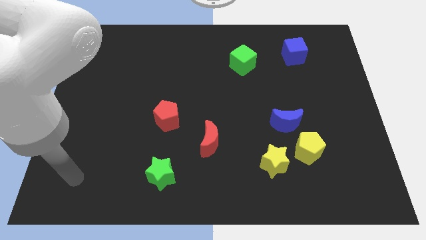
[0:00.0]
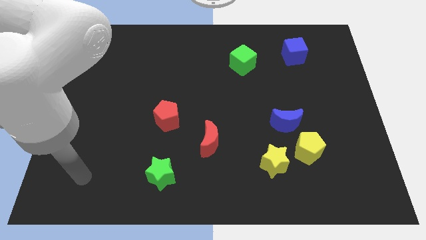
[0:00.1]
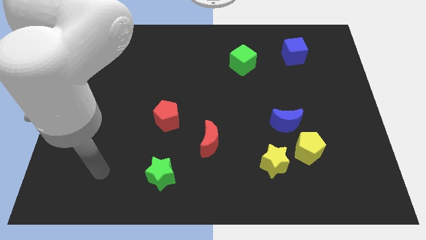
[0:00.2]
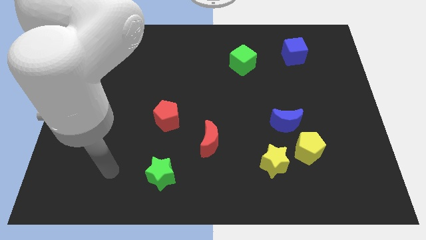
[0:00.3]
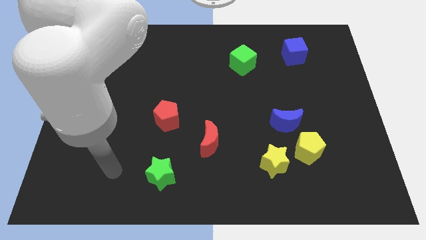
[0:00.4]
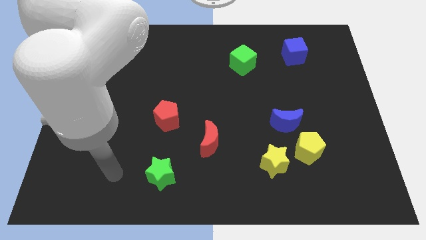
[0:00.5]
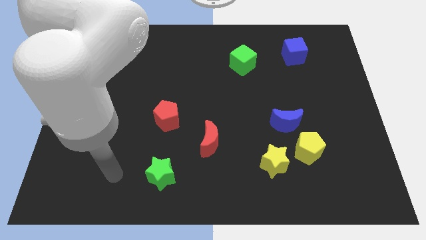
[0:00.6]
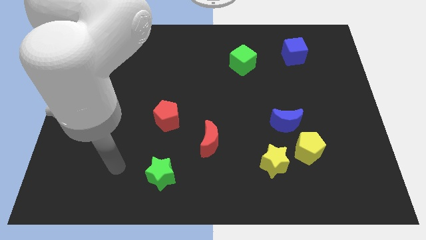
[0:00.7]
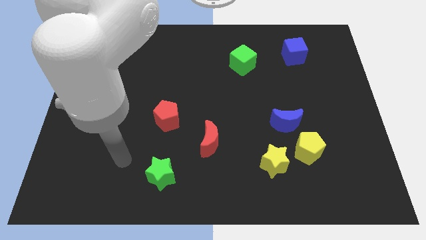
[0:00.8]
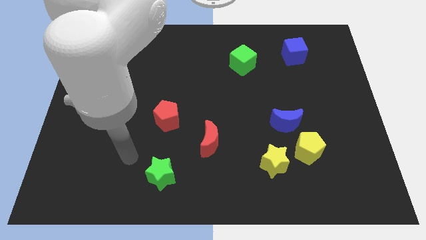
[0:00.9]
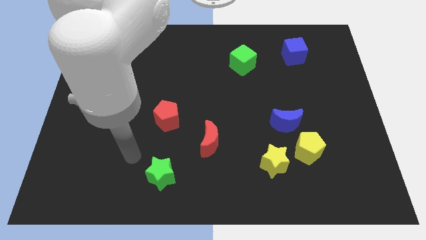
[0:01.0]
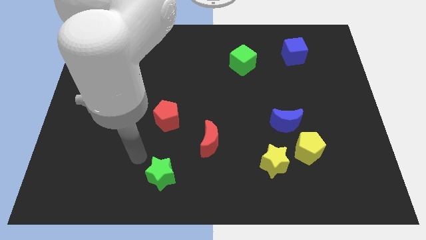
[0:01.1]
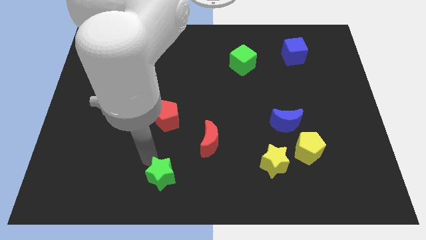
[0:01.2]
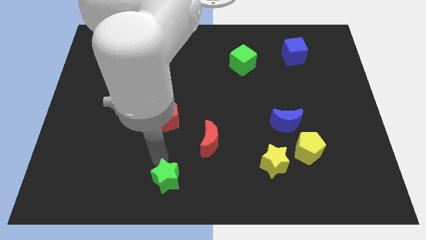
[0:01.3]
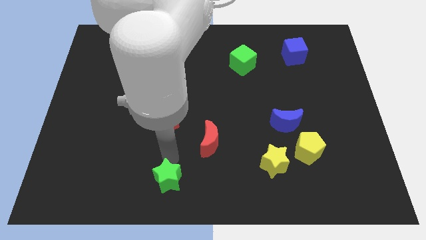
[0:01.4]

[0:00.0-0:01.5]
place your arm to the top of green star

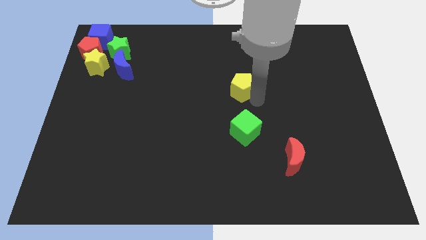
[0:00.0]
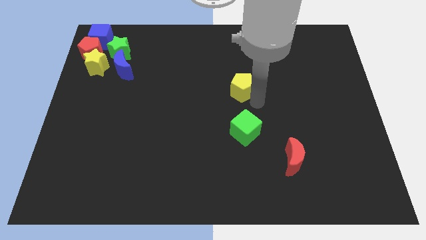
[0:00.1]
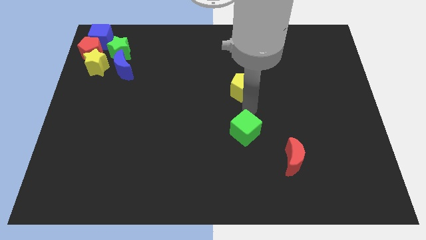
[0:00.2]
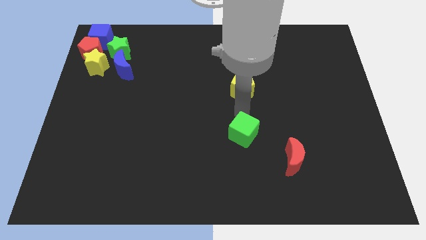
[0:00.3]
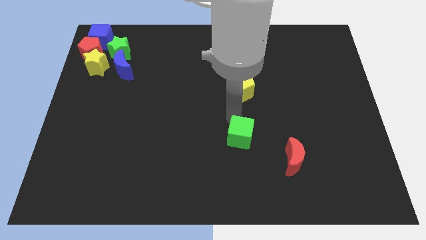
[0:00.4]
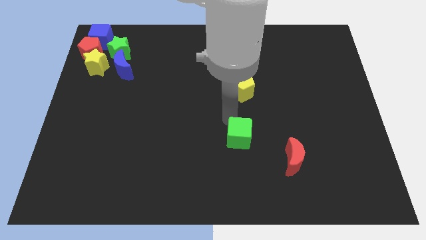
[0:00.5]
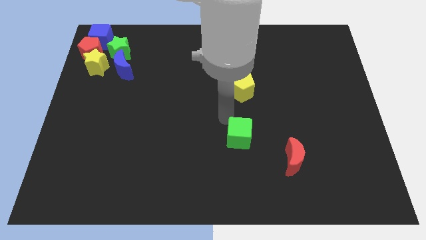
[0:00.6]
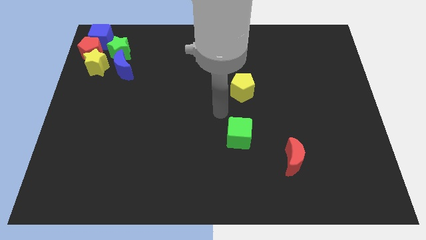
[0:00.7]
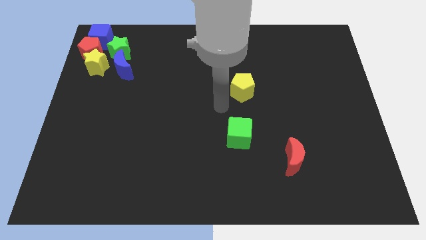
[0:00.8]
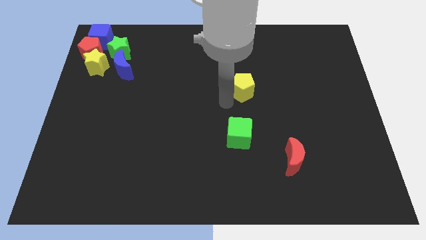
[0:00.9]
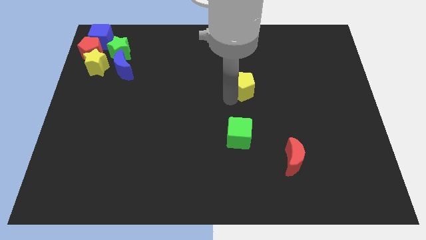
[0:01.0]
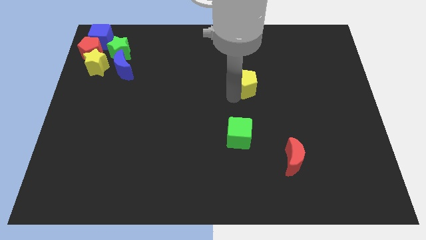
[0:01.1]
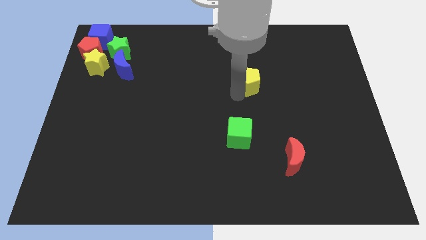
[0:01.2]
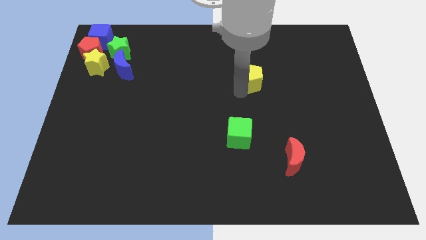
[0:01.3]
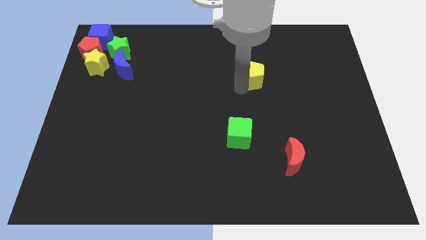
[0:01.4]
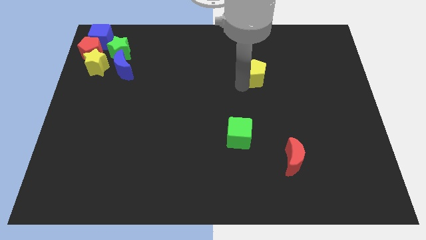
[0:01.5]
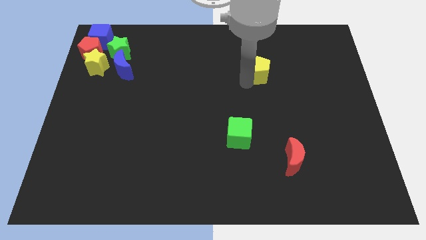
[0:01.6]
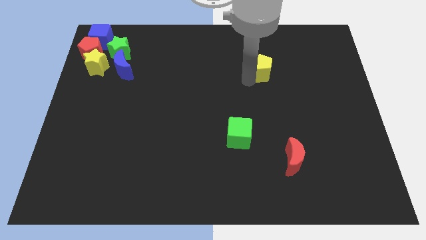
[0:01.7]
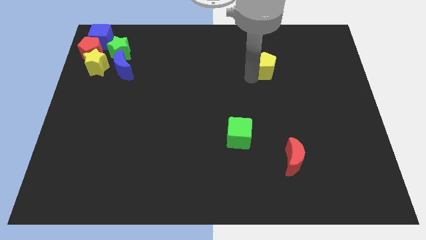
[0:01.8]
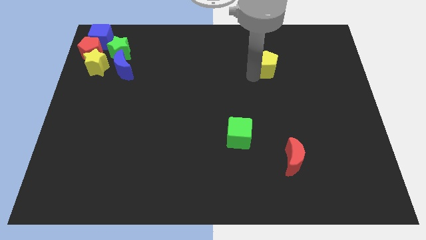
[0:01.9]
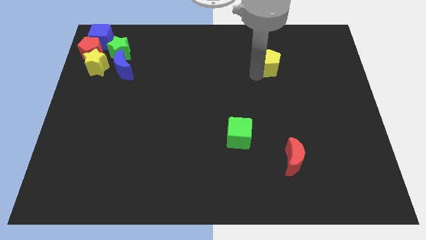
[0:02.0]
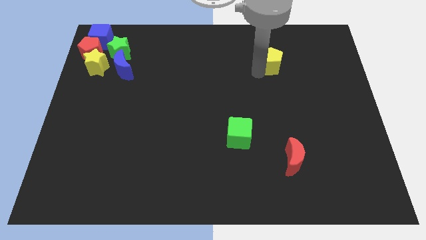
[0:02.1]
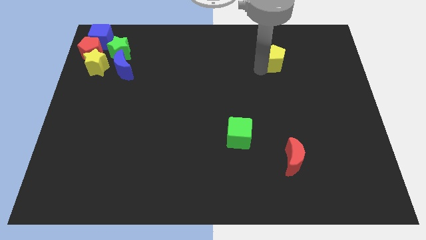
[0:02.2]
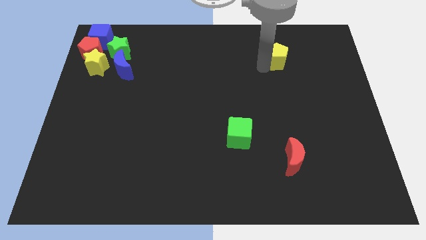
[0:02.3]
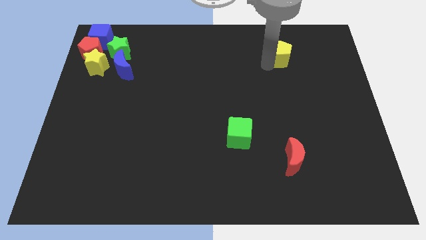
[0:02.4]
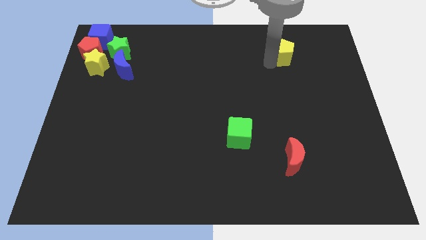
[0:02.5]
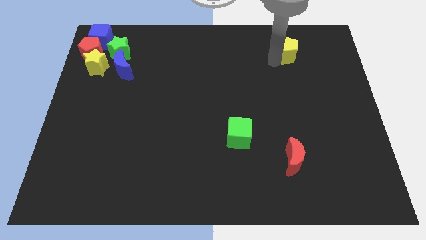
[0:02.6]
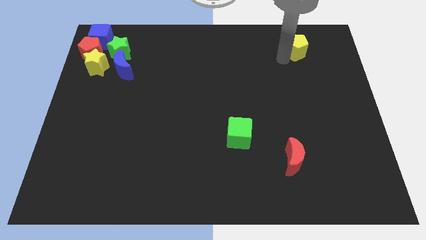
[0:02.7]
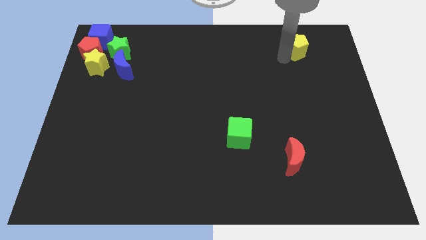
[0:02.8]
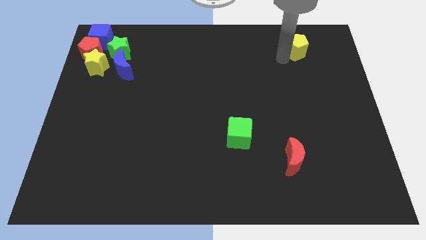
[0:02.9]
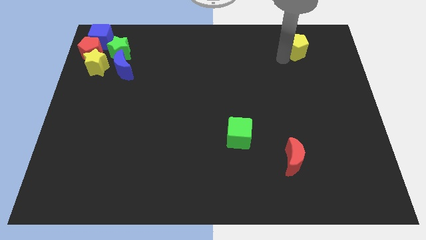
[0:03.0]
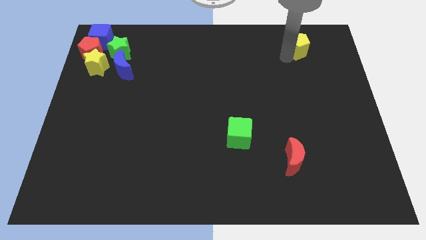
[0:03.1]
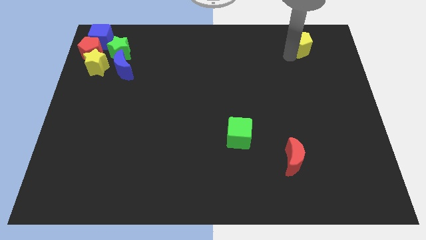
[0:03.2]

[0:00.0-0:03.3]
place the yellow pentagon to the top right

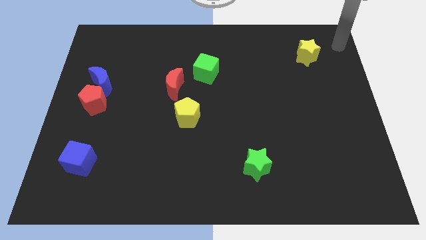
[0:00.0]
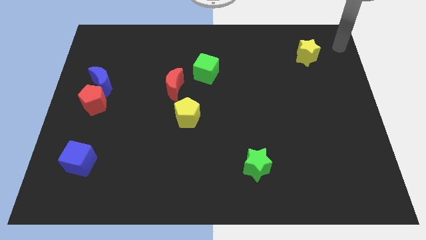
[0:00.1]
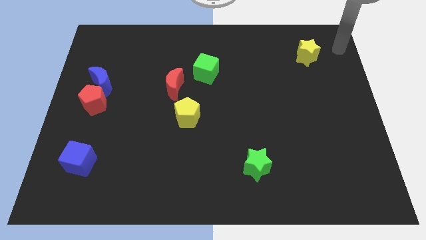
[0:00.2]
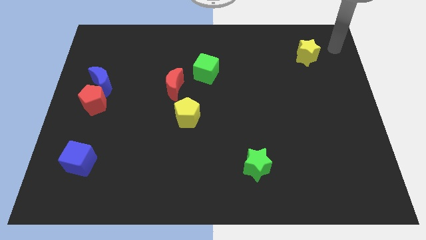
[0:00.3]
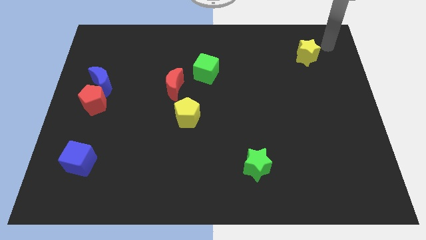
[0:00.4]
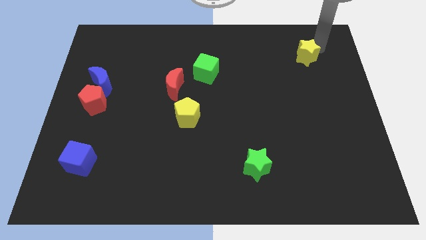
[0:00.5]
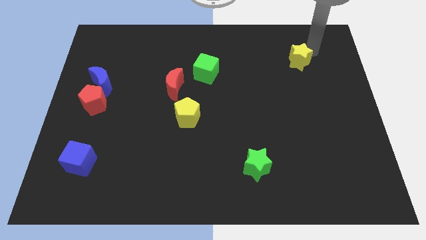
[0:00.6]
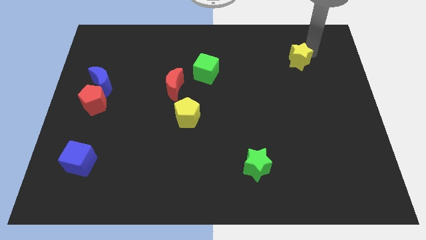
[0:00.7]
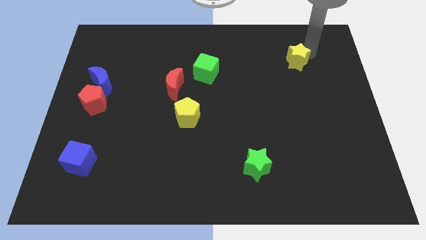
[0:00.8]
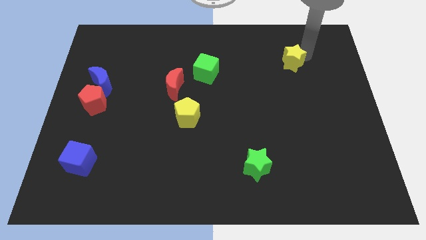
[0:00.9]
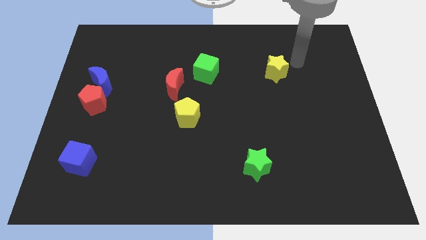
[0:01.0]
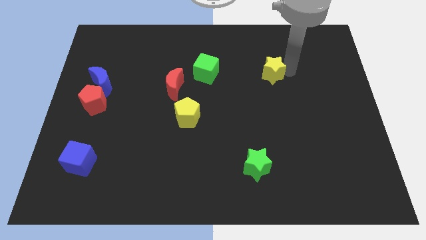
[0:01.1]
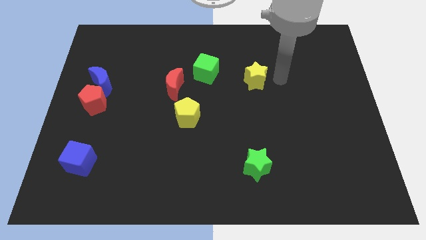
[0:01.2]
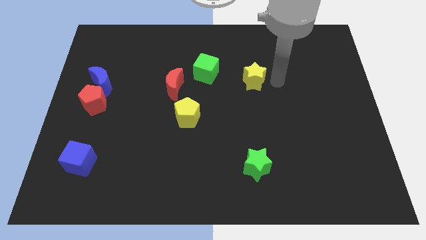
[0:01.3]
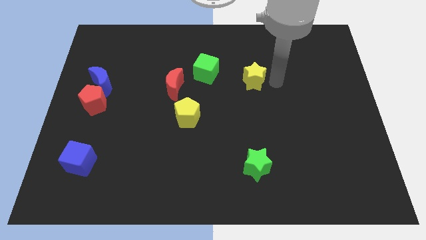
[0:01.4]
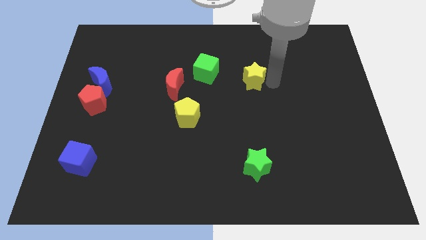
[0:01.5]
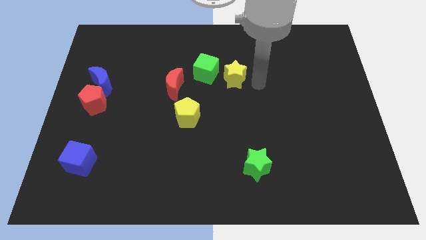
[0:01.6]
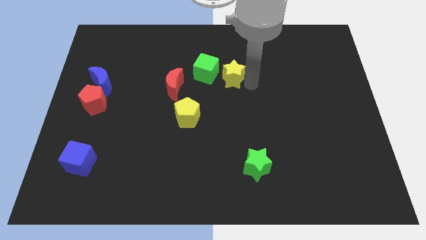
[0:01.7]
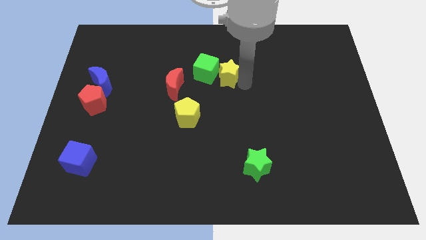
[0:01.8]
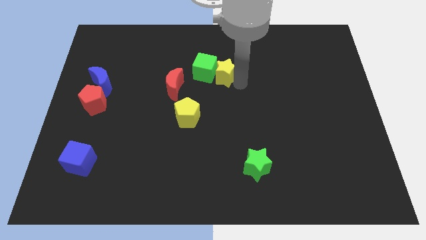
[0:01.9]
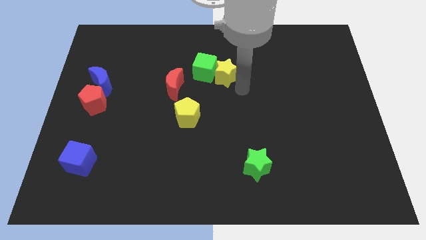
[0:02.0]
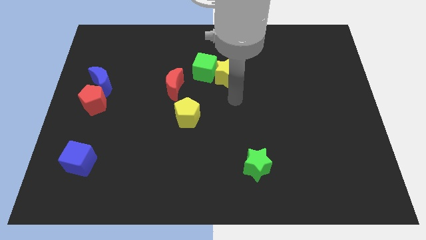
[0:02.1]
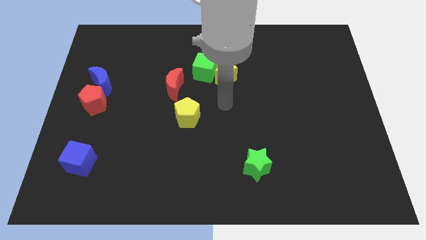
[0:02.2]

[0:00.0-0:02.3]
move the yellow star into green cube

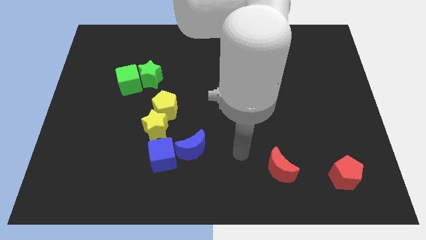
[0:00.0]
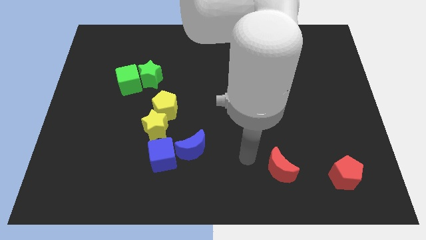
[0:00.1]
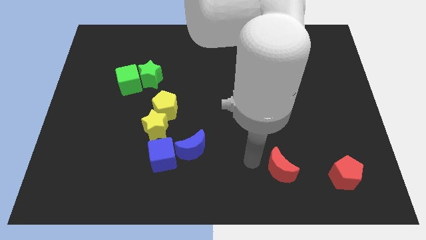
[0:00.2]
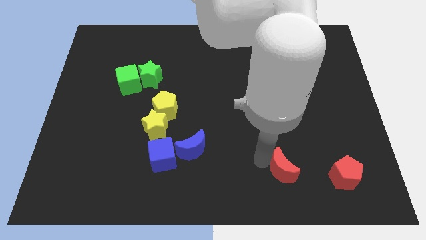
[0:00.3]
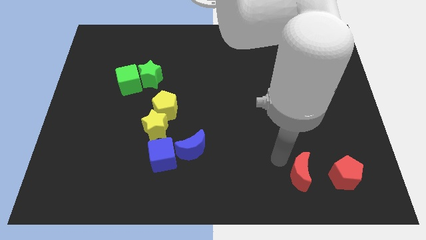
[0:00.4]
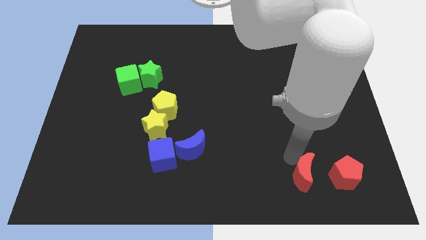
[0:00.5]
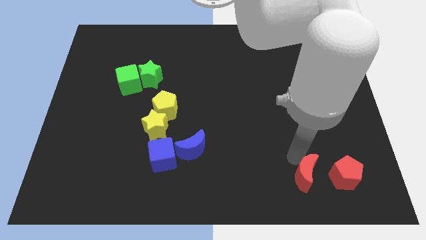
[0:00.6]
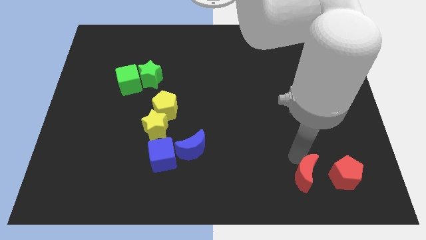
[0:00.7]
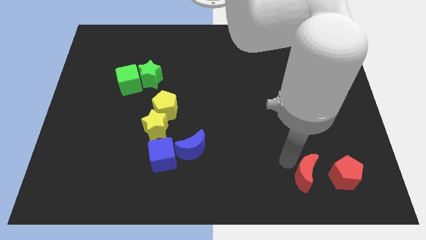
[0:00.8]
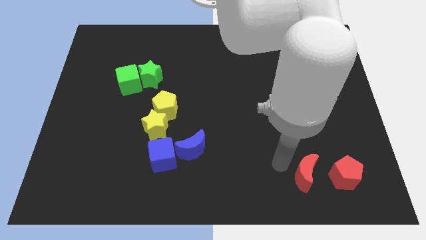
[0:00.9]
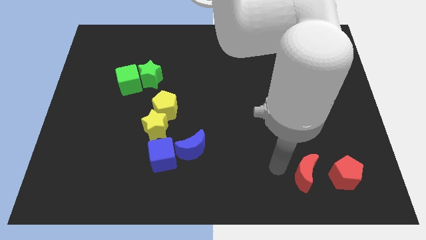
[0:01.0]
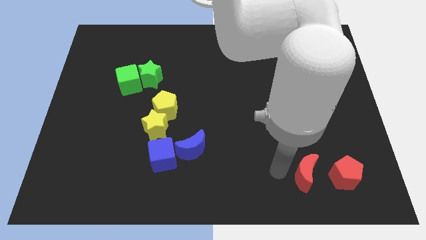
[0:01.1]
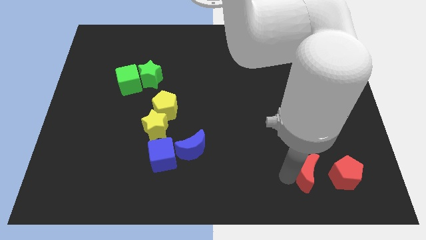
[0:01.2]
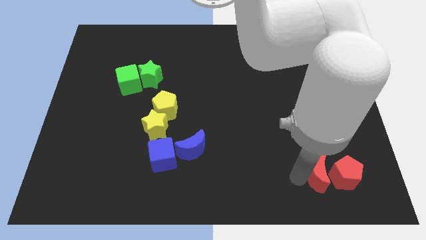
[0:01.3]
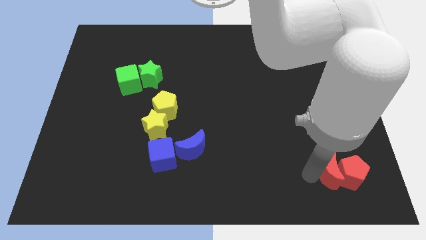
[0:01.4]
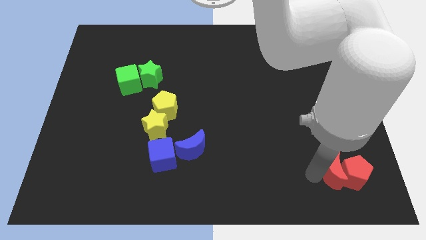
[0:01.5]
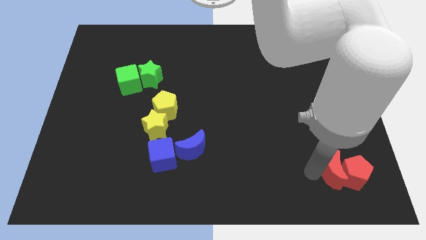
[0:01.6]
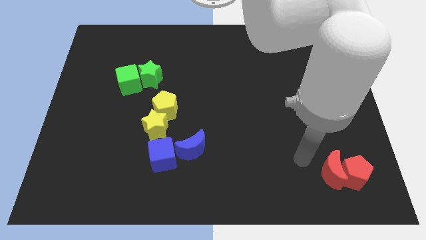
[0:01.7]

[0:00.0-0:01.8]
group up the red blocks at the bottom right corner

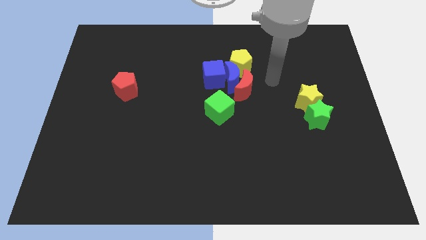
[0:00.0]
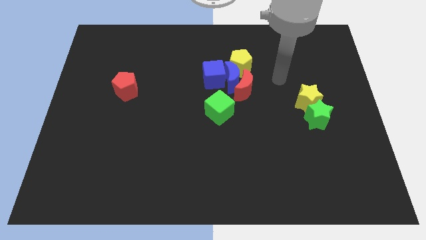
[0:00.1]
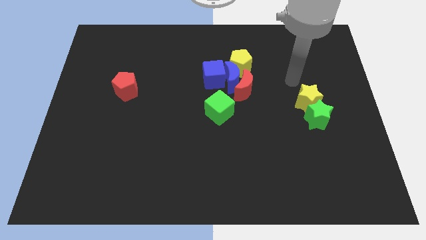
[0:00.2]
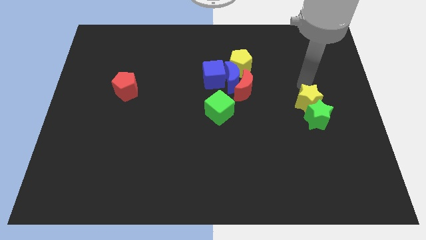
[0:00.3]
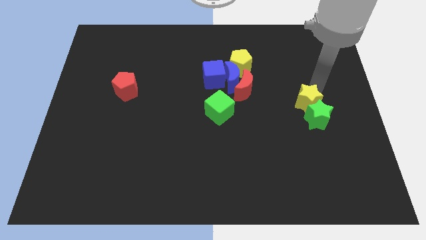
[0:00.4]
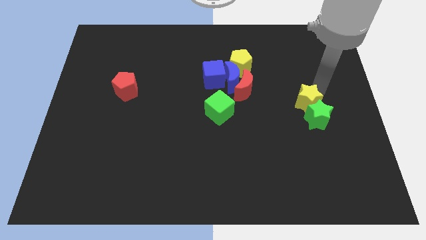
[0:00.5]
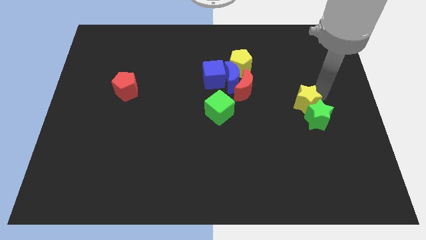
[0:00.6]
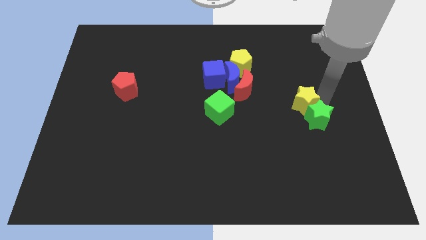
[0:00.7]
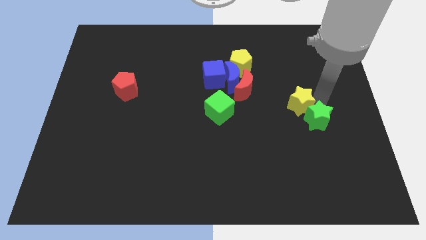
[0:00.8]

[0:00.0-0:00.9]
place your arm right to yellow star
